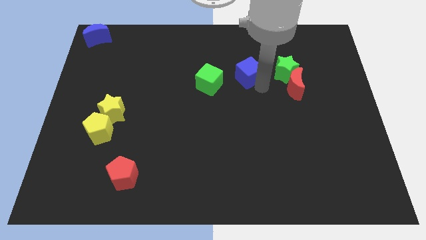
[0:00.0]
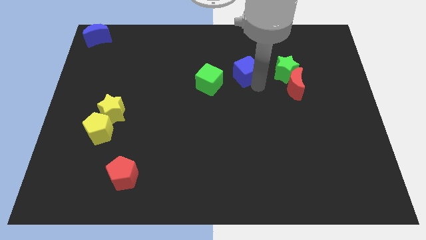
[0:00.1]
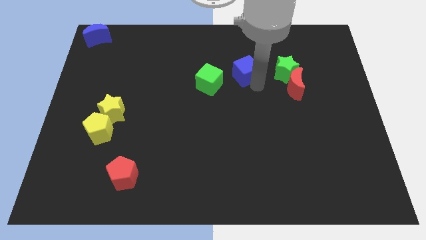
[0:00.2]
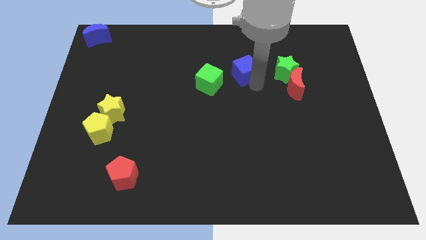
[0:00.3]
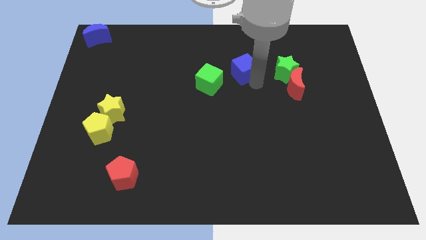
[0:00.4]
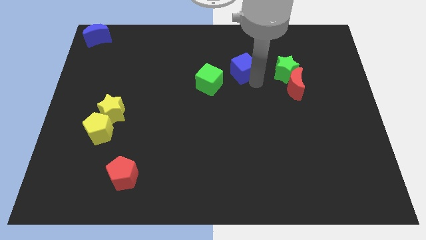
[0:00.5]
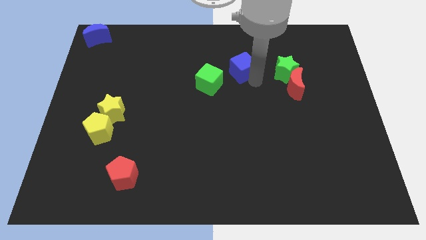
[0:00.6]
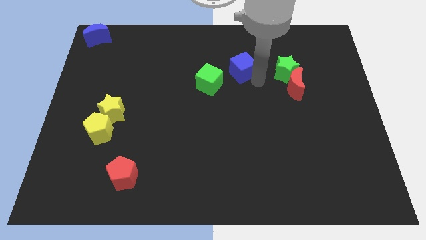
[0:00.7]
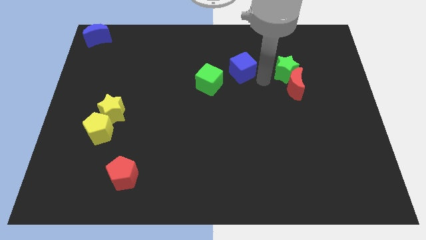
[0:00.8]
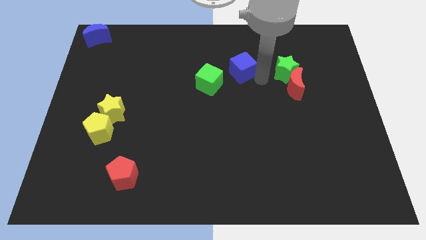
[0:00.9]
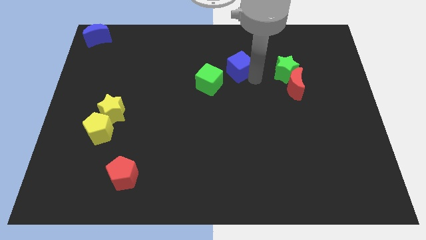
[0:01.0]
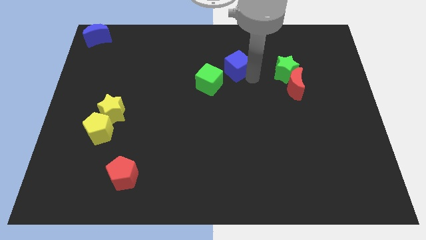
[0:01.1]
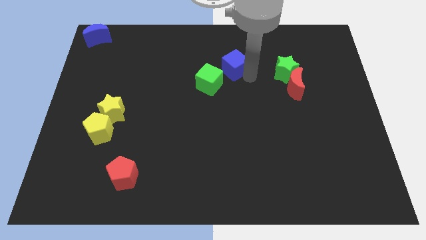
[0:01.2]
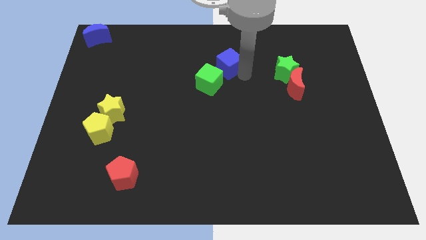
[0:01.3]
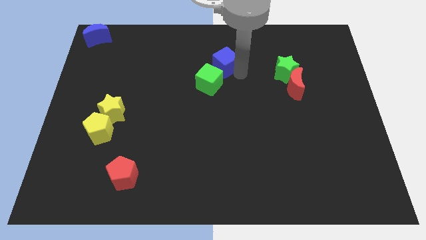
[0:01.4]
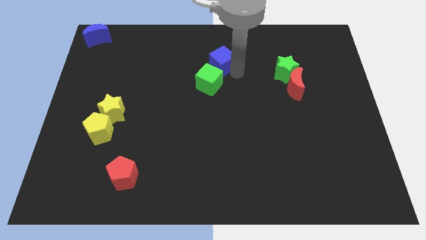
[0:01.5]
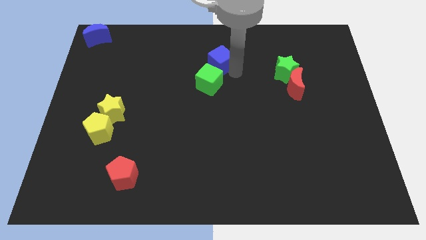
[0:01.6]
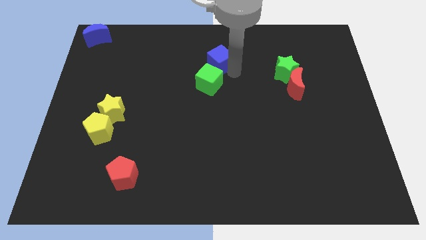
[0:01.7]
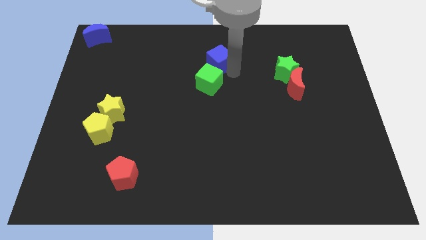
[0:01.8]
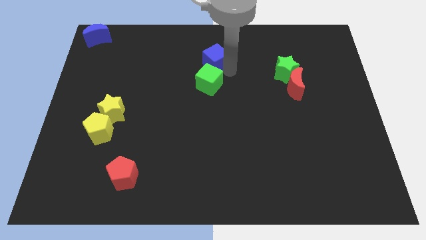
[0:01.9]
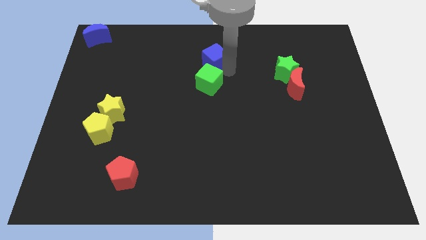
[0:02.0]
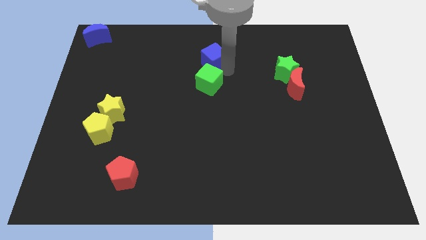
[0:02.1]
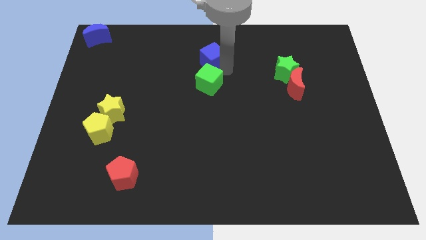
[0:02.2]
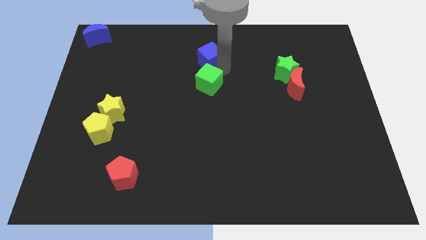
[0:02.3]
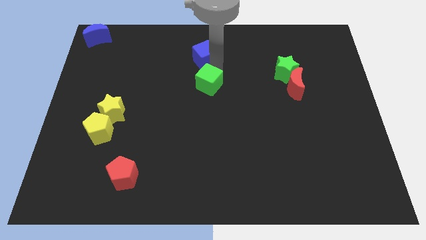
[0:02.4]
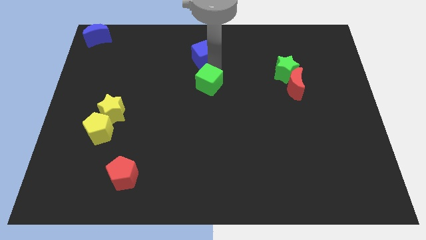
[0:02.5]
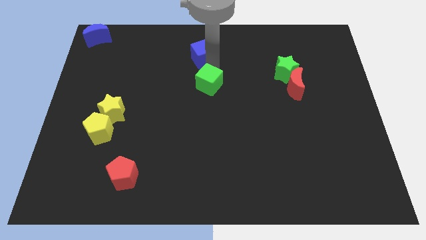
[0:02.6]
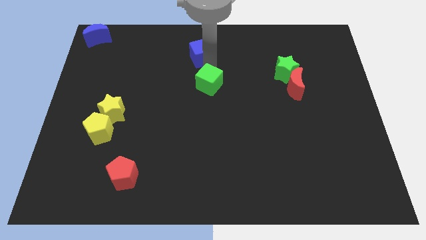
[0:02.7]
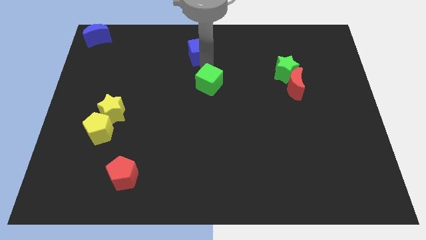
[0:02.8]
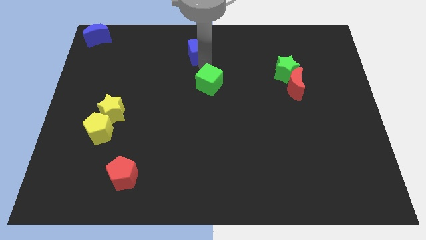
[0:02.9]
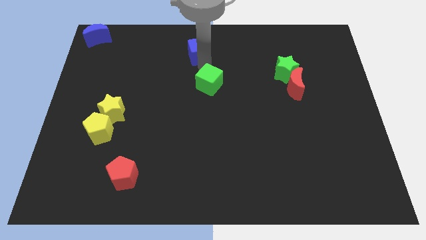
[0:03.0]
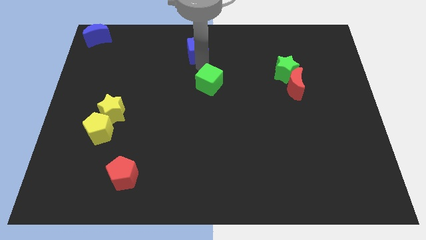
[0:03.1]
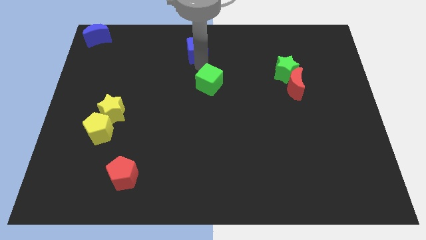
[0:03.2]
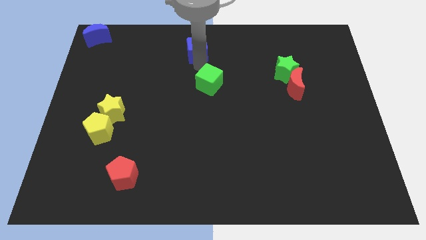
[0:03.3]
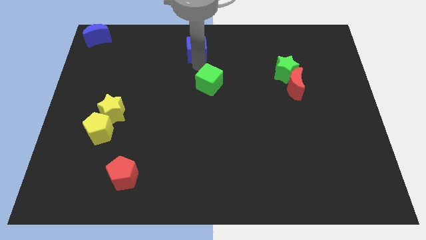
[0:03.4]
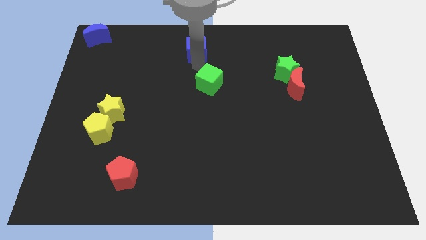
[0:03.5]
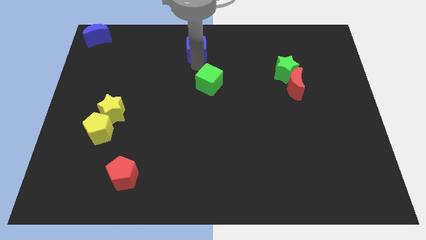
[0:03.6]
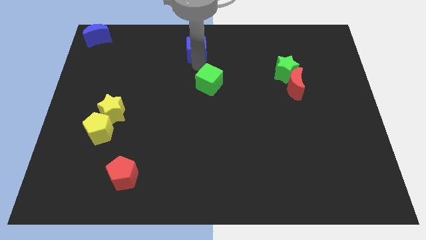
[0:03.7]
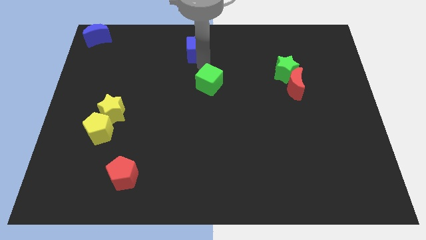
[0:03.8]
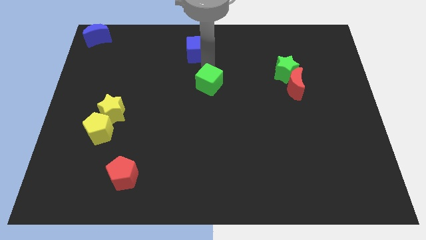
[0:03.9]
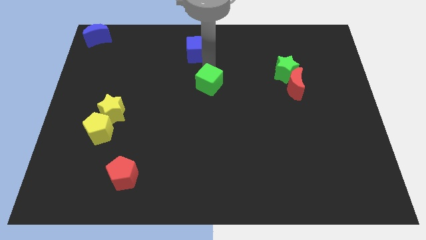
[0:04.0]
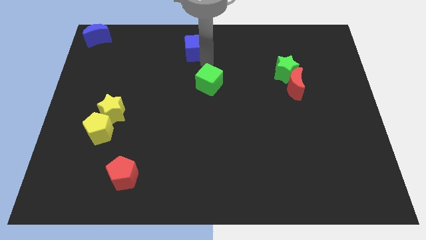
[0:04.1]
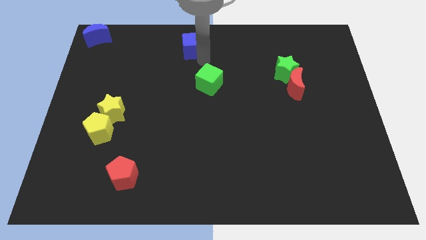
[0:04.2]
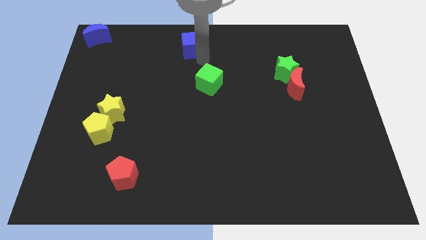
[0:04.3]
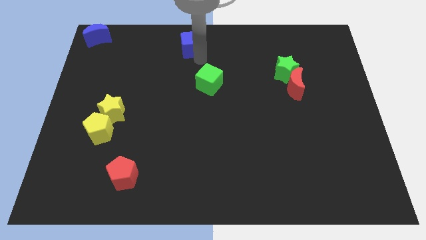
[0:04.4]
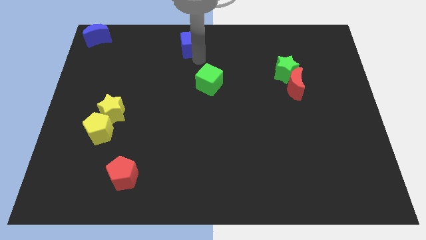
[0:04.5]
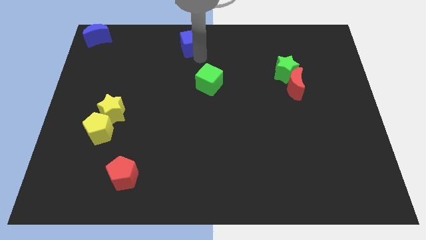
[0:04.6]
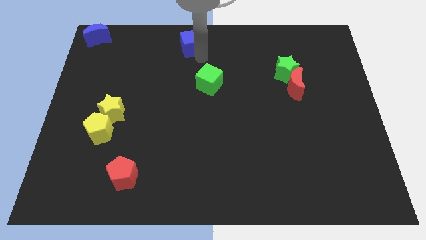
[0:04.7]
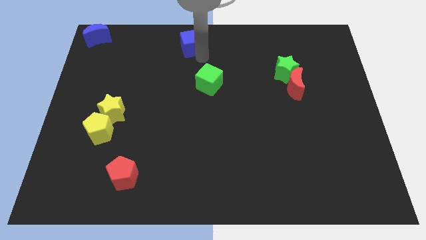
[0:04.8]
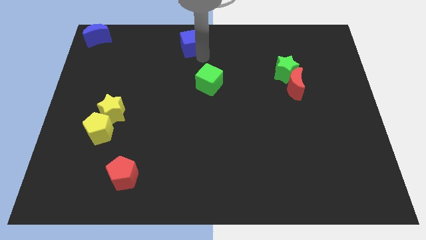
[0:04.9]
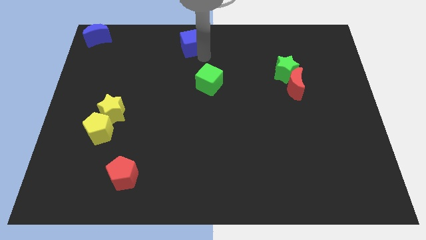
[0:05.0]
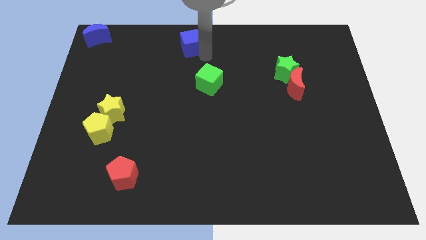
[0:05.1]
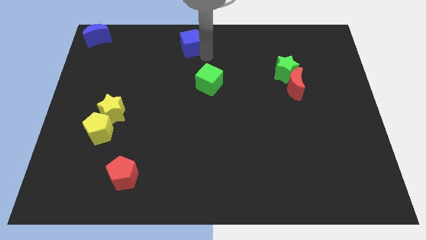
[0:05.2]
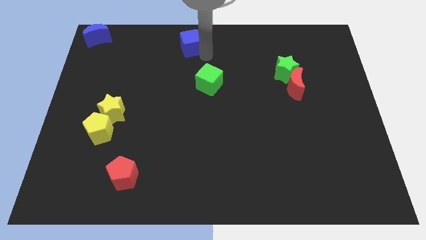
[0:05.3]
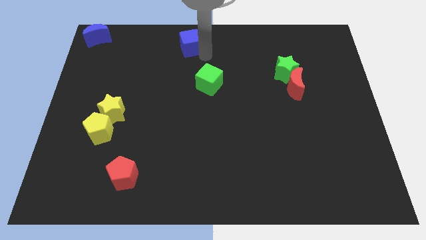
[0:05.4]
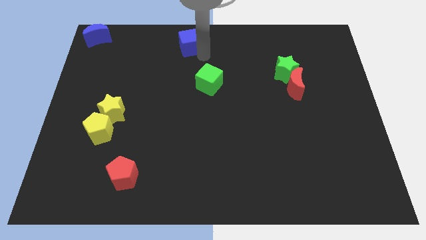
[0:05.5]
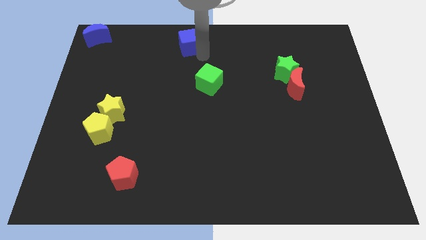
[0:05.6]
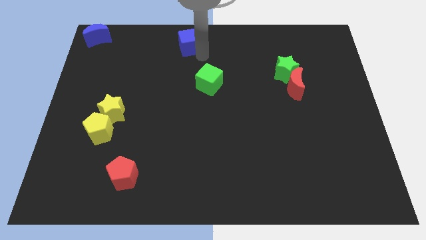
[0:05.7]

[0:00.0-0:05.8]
slide the blue cube to top center

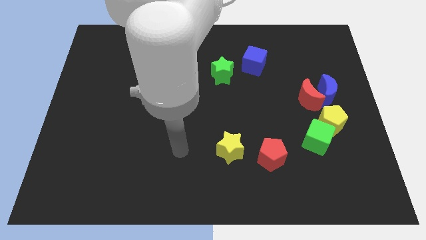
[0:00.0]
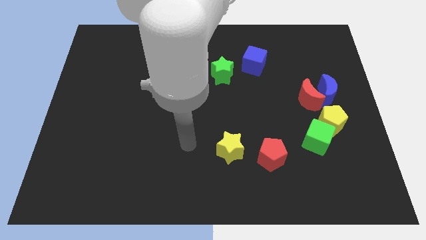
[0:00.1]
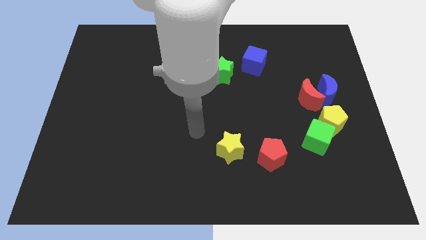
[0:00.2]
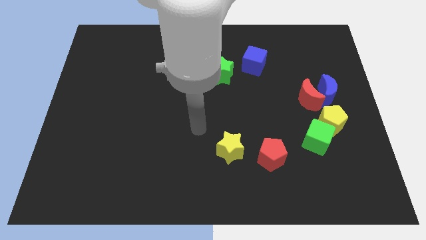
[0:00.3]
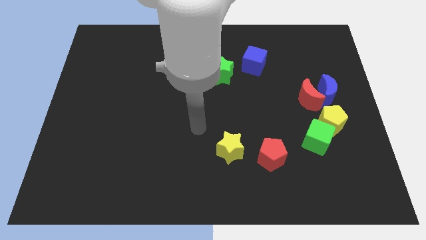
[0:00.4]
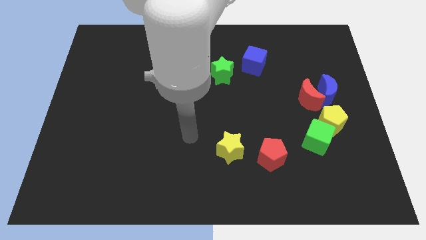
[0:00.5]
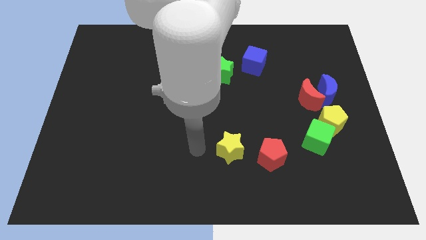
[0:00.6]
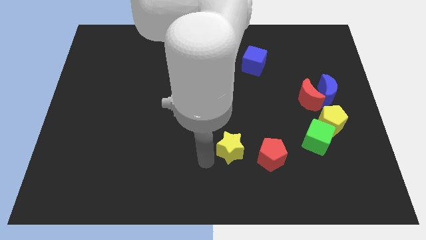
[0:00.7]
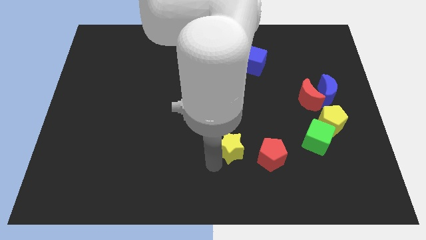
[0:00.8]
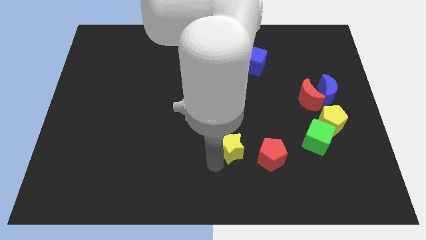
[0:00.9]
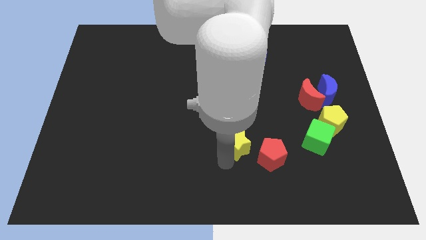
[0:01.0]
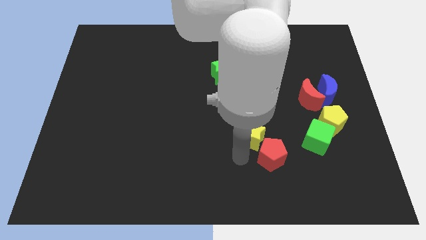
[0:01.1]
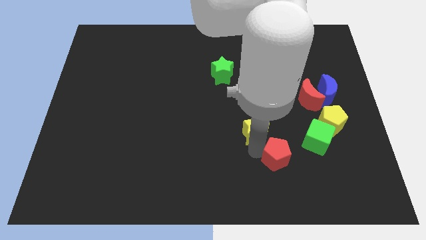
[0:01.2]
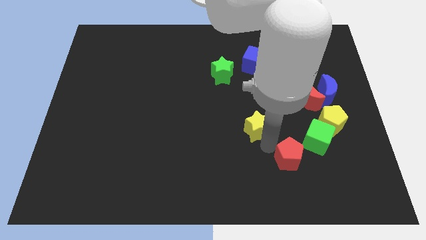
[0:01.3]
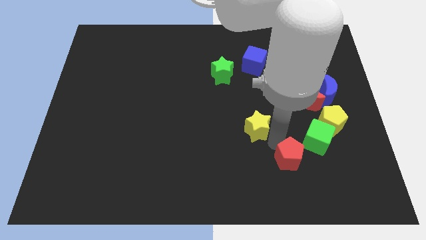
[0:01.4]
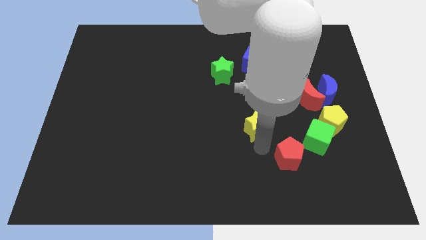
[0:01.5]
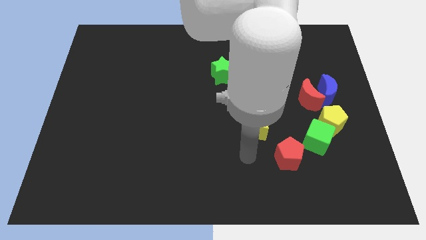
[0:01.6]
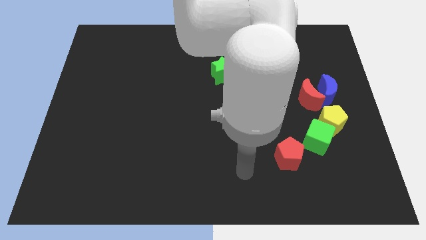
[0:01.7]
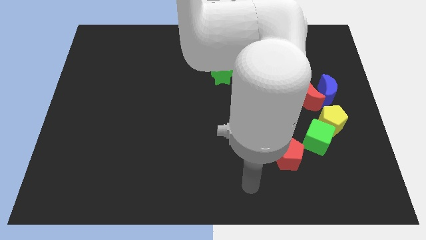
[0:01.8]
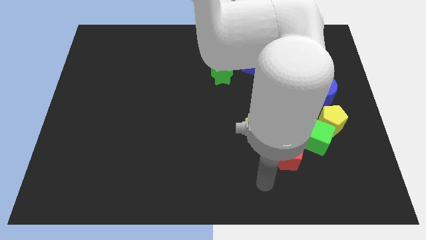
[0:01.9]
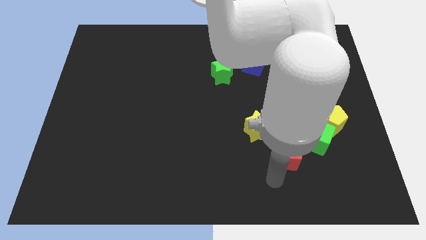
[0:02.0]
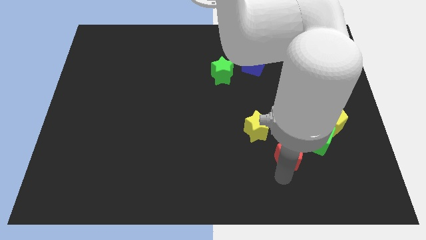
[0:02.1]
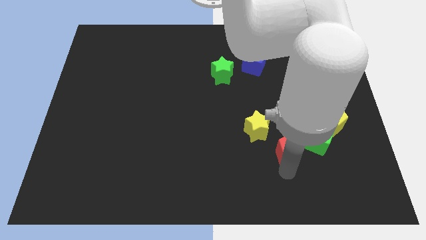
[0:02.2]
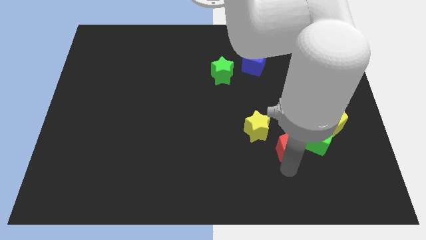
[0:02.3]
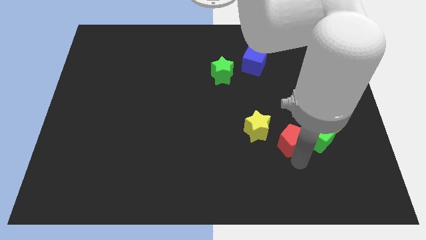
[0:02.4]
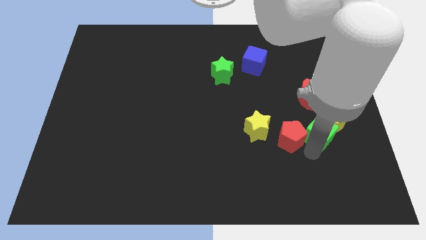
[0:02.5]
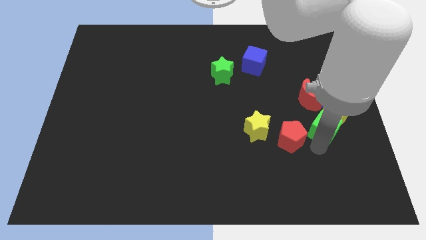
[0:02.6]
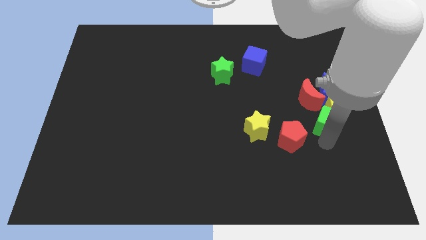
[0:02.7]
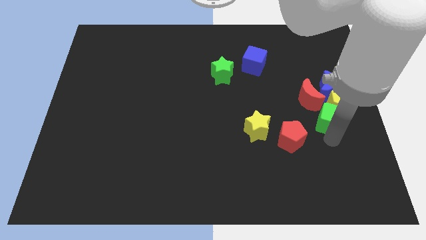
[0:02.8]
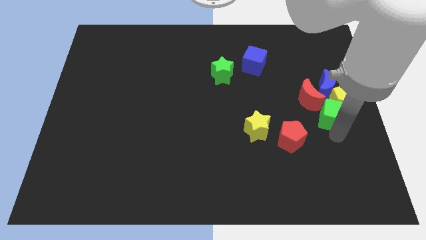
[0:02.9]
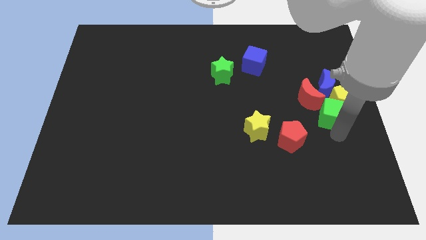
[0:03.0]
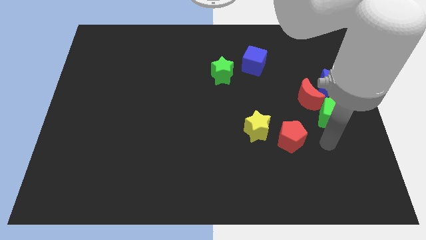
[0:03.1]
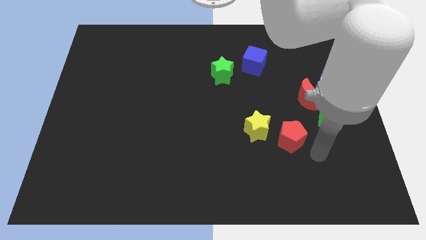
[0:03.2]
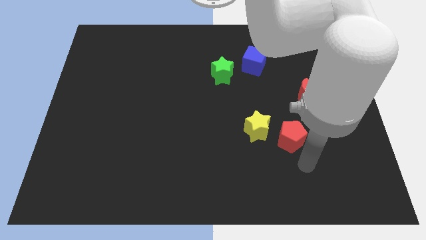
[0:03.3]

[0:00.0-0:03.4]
separate the yellow star red pentagon and the green cube from each other
